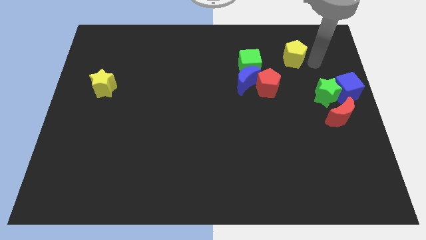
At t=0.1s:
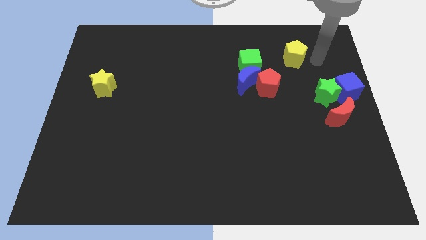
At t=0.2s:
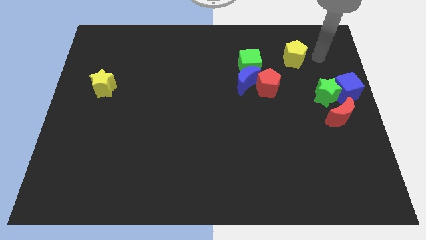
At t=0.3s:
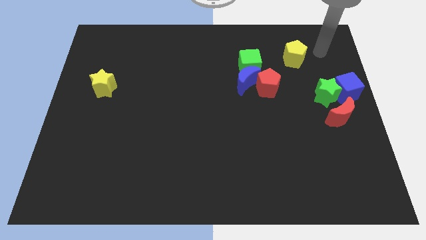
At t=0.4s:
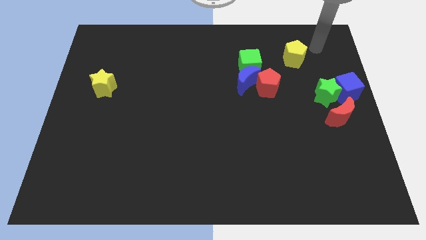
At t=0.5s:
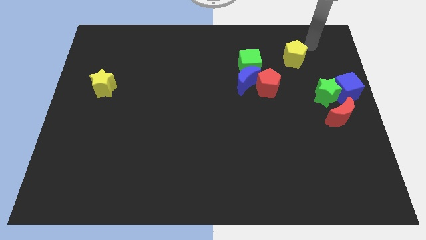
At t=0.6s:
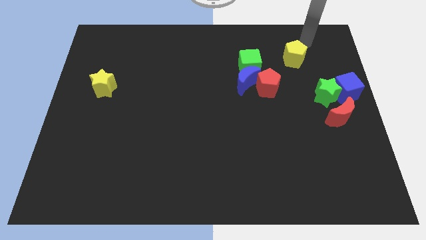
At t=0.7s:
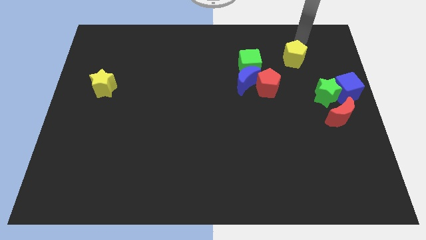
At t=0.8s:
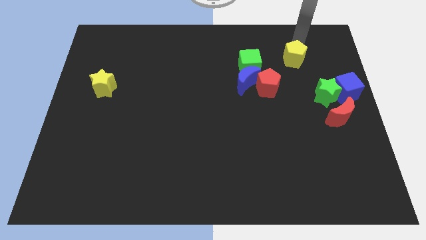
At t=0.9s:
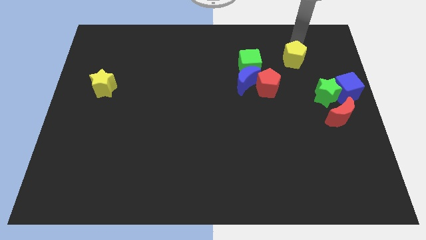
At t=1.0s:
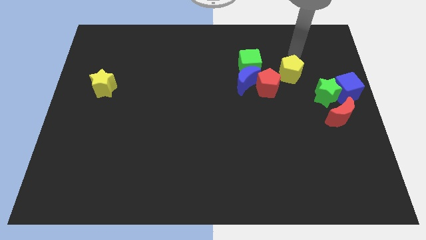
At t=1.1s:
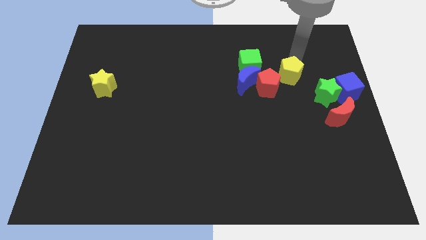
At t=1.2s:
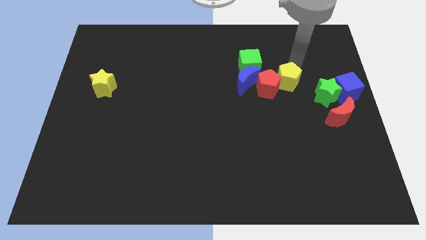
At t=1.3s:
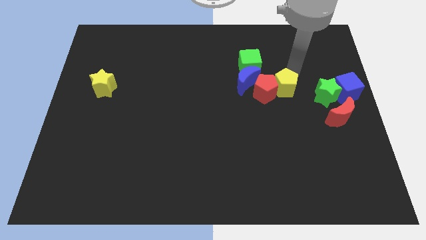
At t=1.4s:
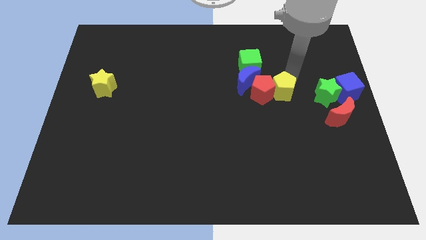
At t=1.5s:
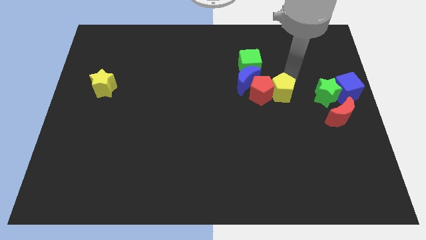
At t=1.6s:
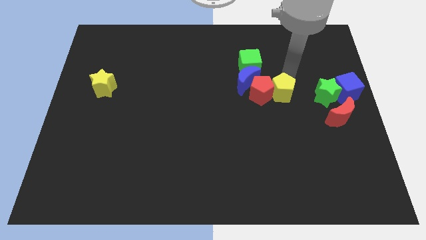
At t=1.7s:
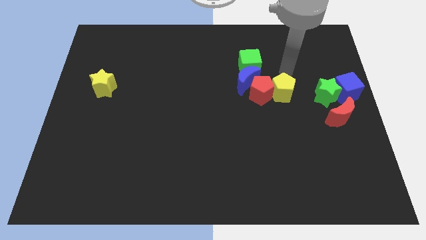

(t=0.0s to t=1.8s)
push the yellow pentagon to the right of the red pentagon

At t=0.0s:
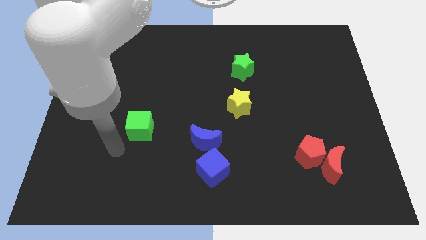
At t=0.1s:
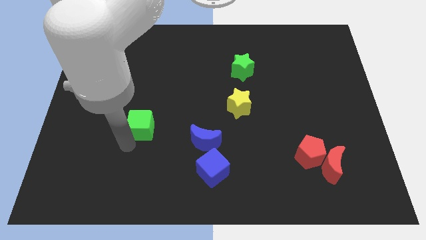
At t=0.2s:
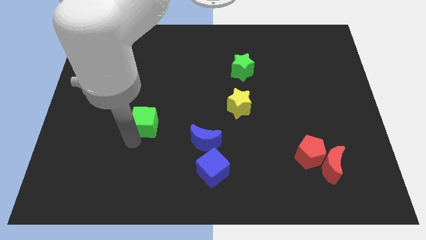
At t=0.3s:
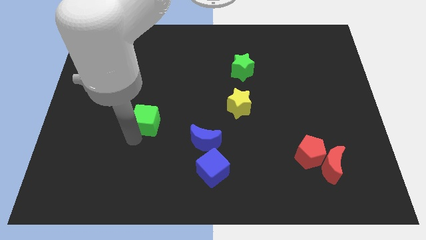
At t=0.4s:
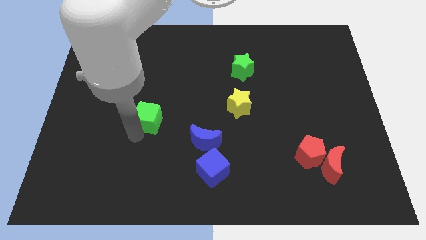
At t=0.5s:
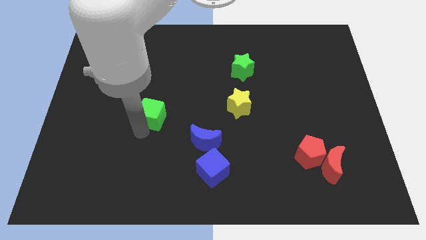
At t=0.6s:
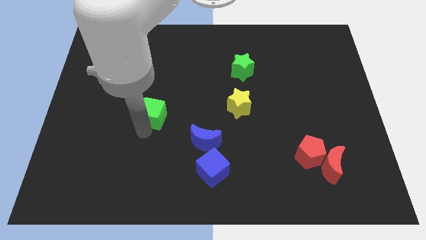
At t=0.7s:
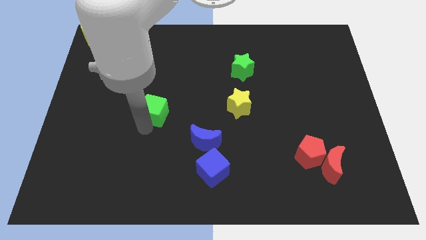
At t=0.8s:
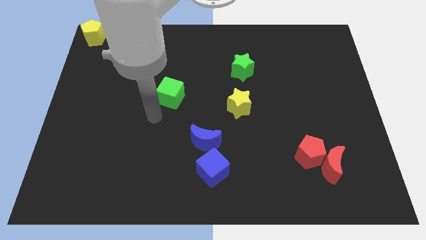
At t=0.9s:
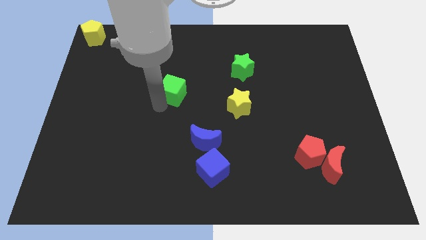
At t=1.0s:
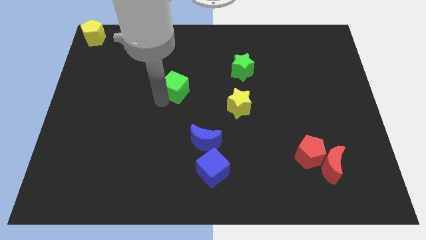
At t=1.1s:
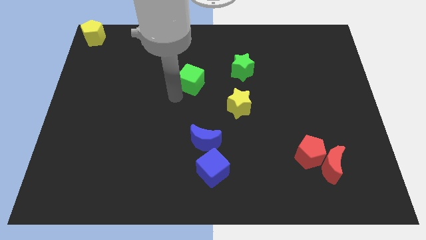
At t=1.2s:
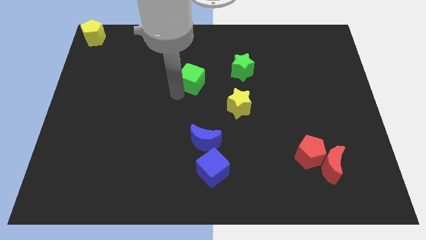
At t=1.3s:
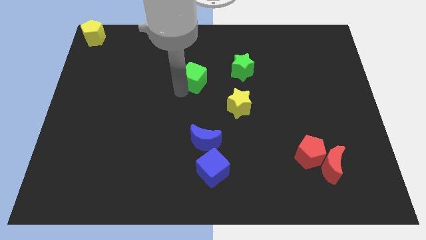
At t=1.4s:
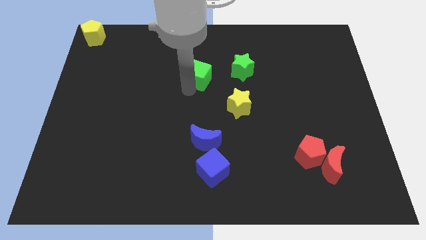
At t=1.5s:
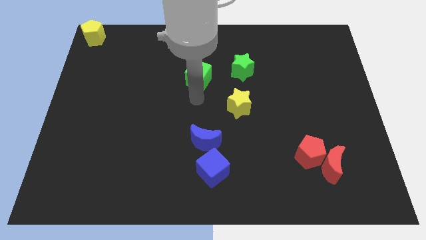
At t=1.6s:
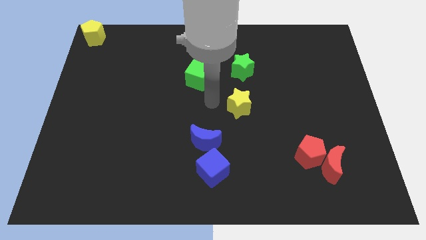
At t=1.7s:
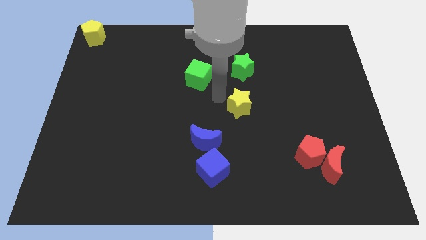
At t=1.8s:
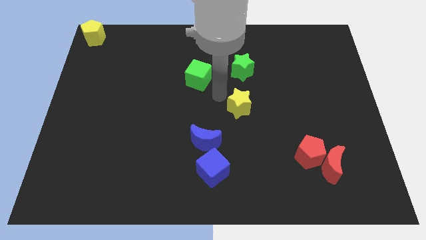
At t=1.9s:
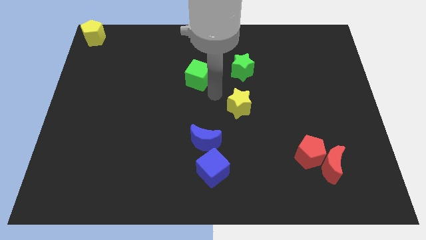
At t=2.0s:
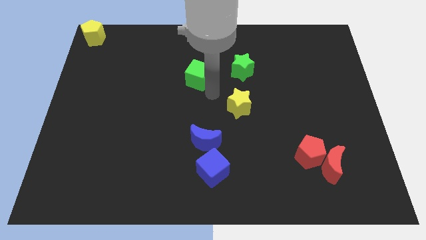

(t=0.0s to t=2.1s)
slide green cube diagonal to yellow star

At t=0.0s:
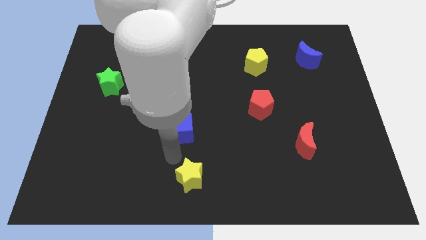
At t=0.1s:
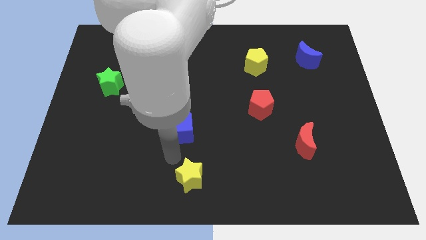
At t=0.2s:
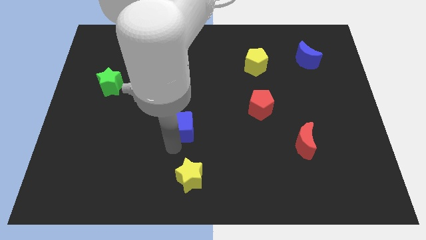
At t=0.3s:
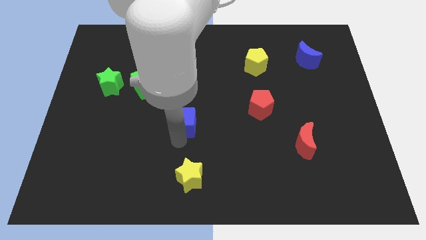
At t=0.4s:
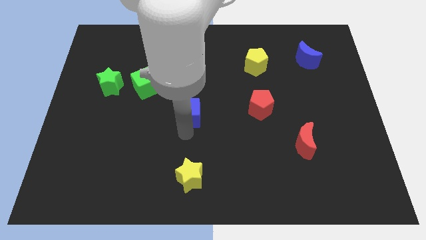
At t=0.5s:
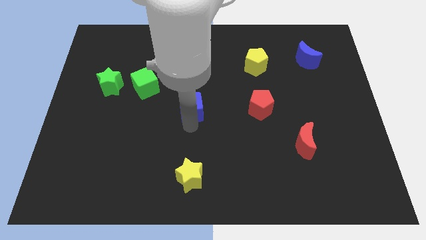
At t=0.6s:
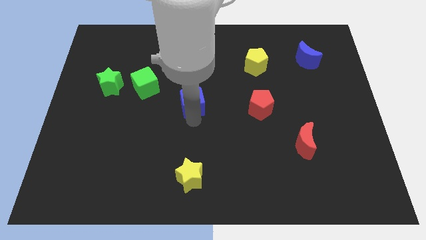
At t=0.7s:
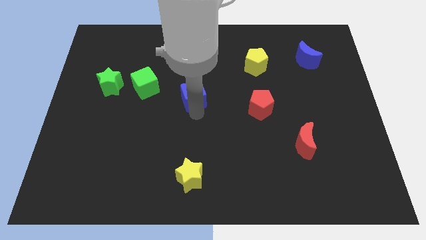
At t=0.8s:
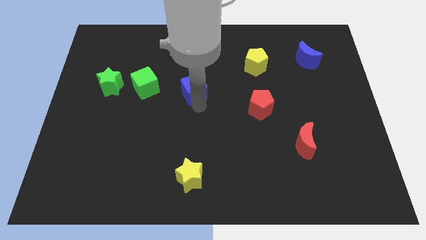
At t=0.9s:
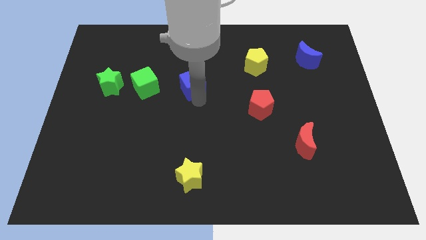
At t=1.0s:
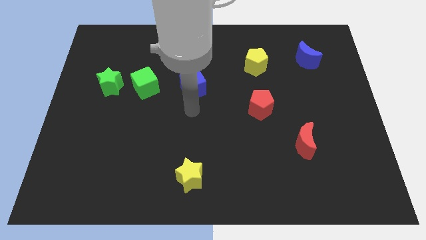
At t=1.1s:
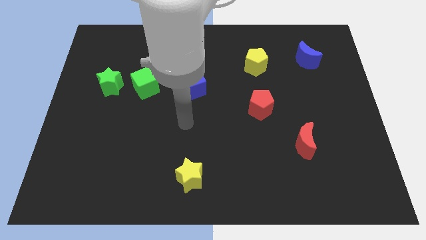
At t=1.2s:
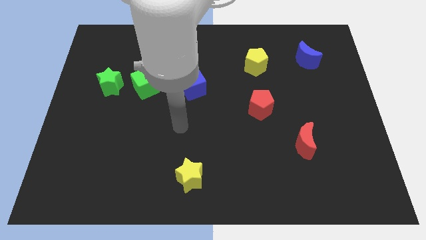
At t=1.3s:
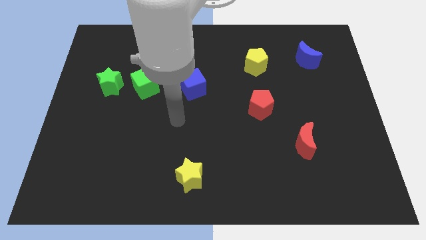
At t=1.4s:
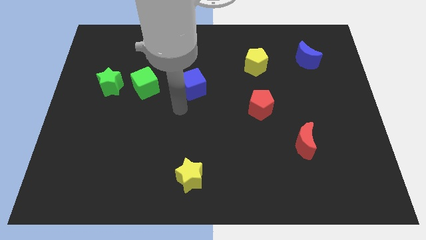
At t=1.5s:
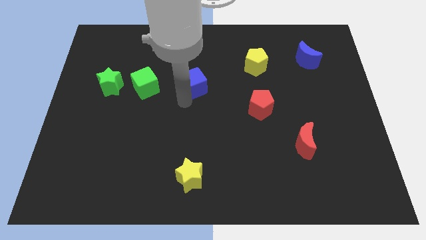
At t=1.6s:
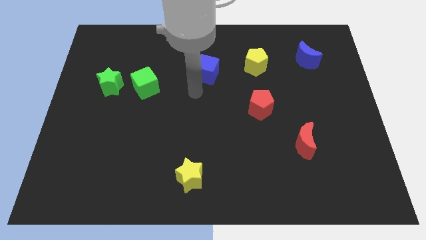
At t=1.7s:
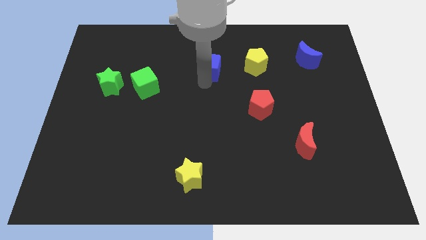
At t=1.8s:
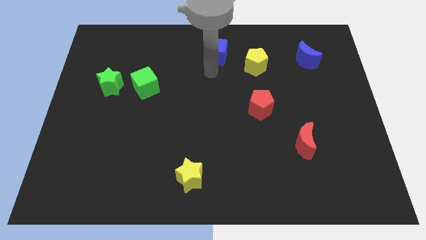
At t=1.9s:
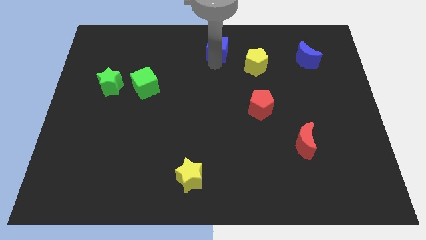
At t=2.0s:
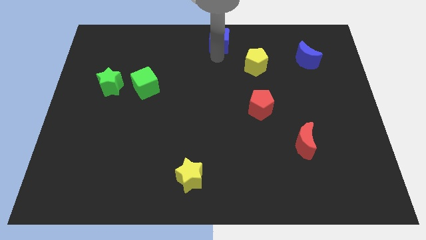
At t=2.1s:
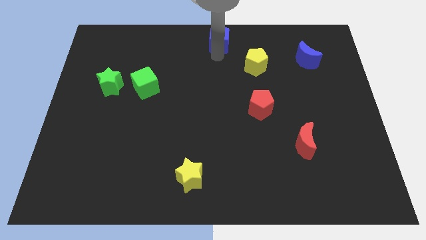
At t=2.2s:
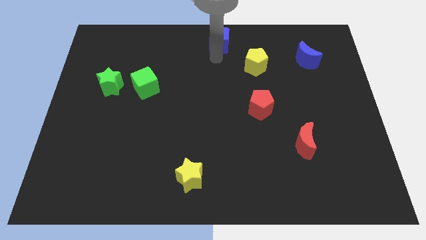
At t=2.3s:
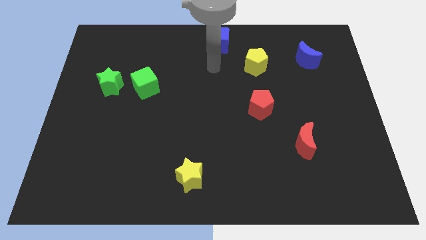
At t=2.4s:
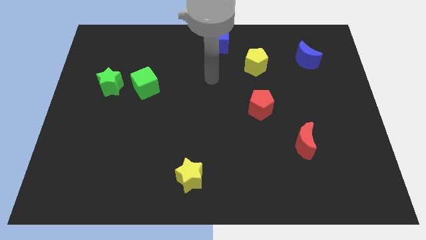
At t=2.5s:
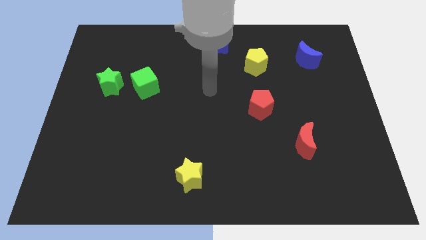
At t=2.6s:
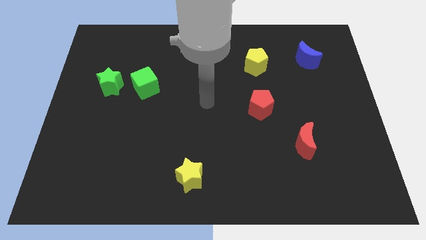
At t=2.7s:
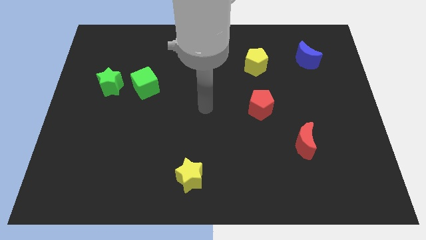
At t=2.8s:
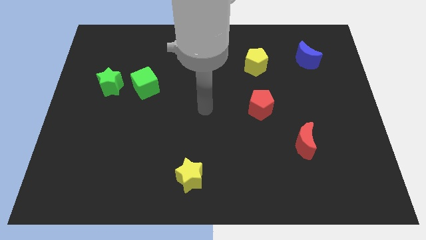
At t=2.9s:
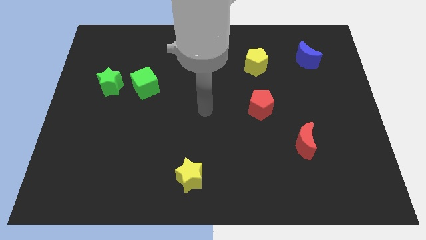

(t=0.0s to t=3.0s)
move the blue cube to the top center of the board

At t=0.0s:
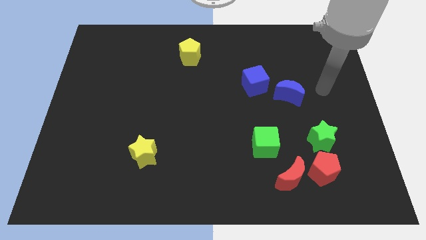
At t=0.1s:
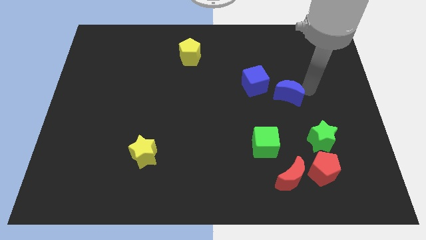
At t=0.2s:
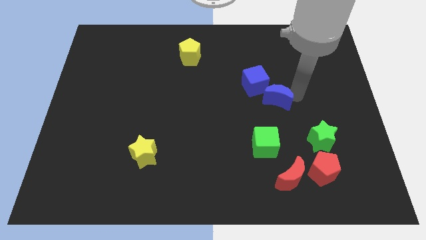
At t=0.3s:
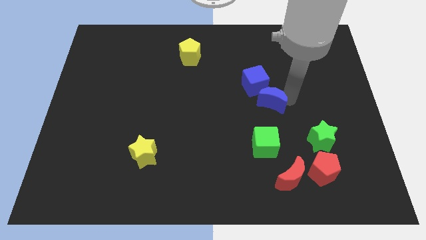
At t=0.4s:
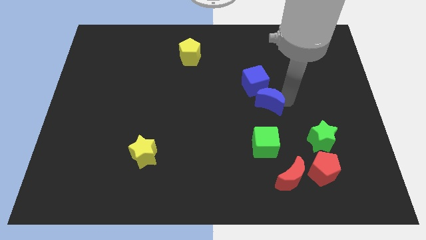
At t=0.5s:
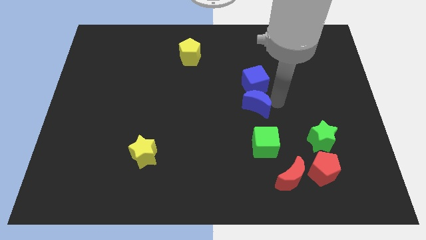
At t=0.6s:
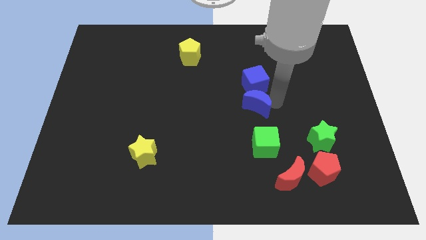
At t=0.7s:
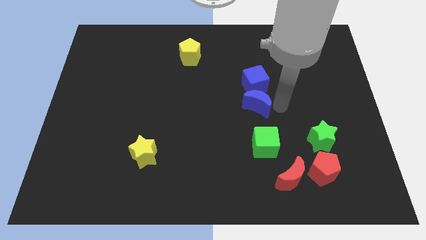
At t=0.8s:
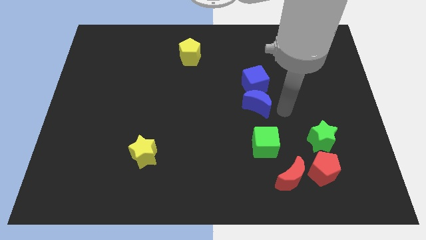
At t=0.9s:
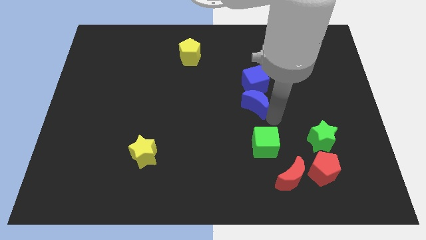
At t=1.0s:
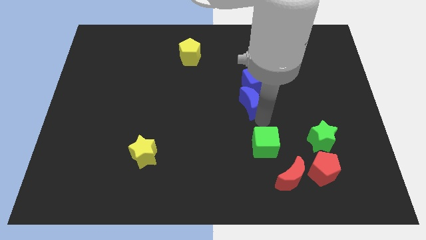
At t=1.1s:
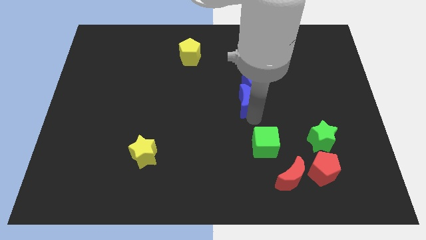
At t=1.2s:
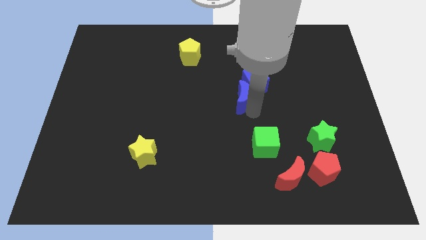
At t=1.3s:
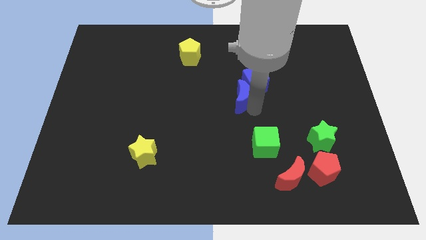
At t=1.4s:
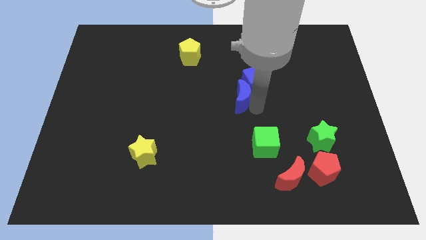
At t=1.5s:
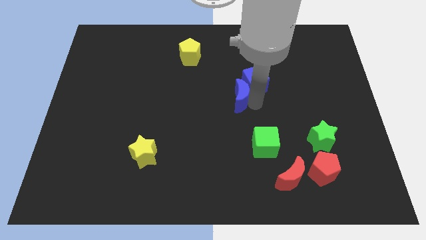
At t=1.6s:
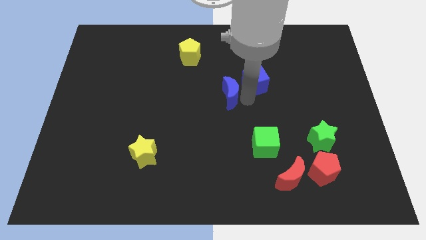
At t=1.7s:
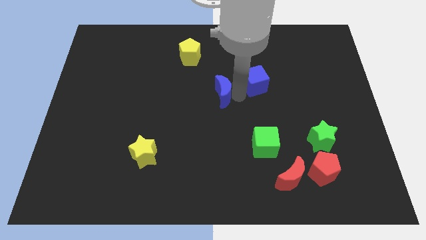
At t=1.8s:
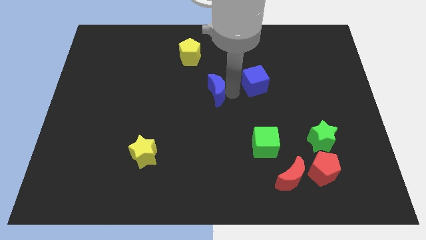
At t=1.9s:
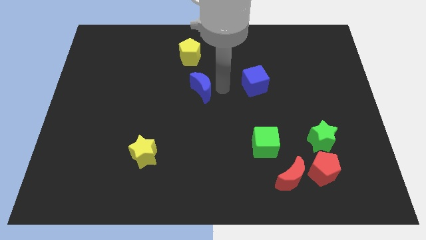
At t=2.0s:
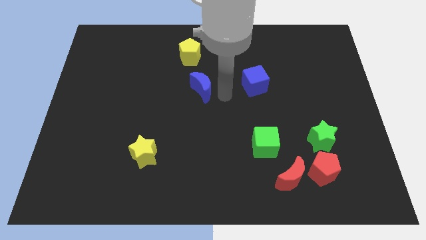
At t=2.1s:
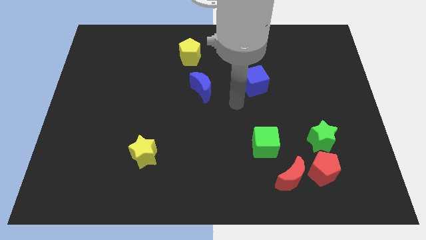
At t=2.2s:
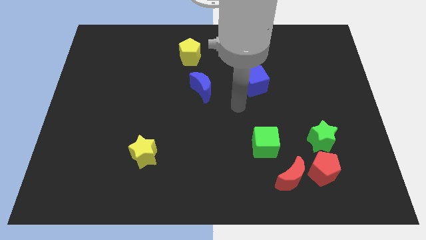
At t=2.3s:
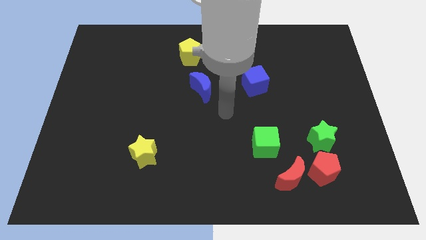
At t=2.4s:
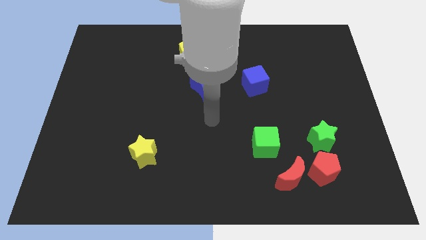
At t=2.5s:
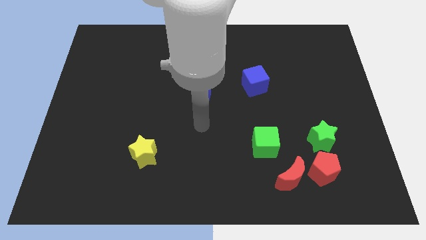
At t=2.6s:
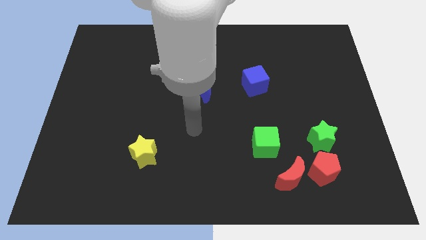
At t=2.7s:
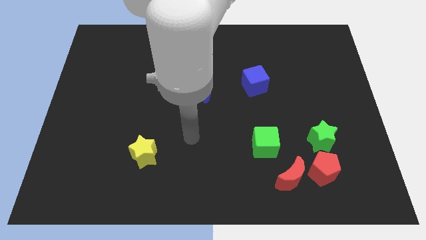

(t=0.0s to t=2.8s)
move the blue moon below the yellow pentagon
